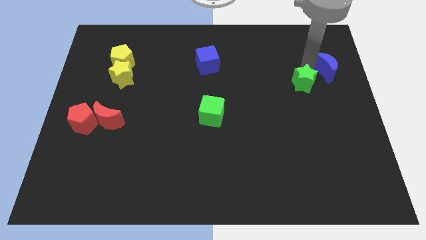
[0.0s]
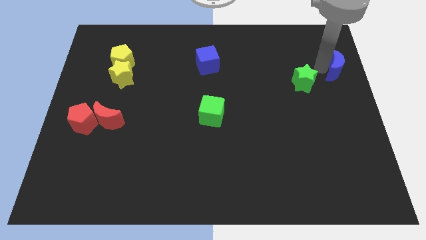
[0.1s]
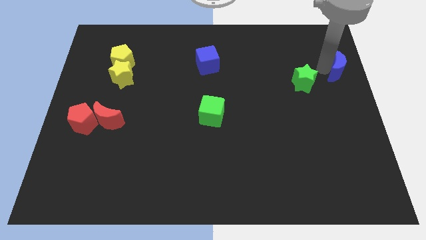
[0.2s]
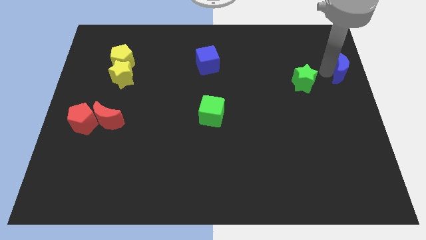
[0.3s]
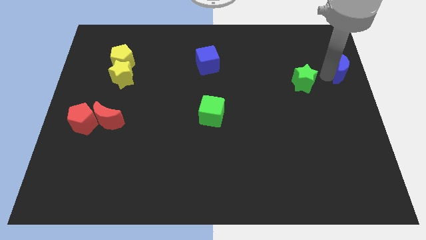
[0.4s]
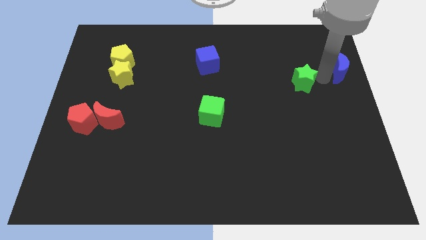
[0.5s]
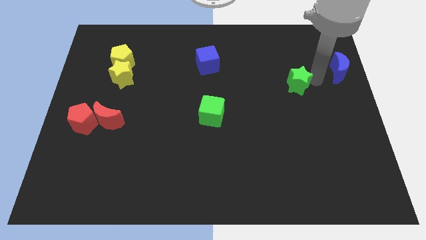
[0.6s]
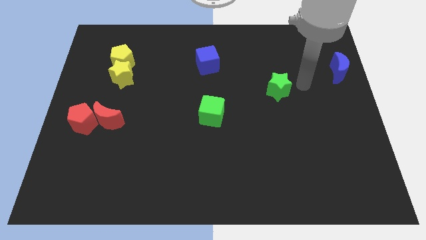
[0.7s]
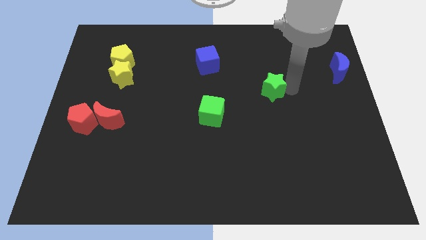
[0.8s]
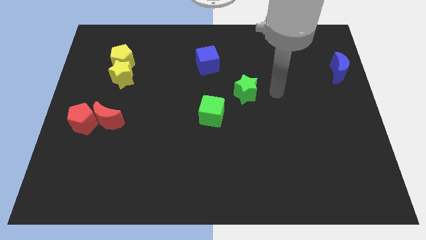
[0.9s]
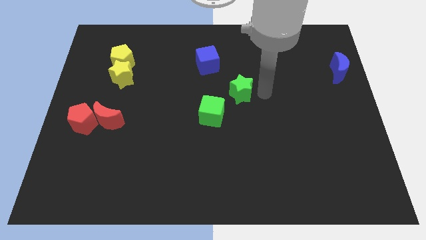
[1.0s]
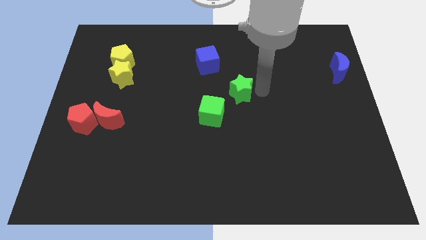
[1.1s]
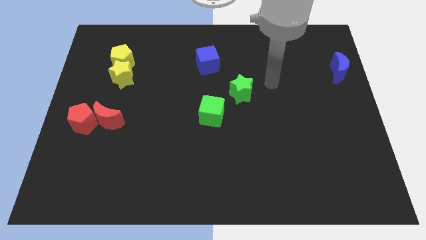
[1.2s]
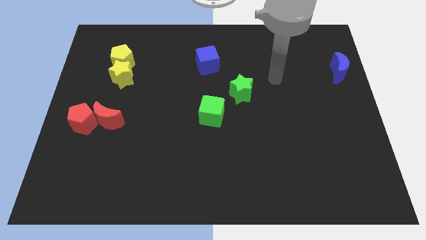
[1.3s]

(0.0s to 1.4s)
move the green star and the blue moon away from each other

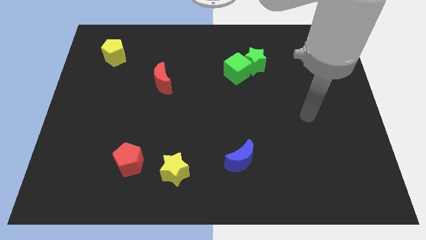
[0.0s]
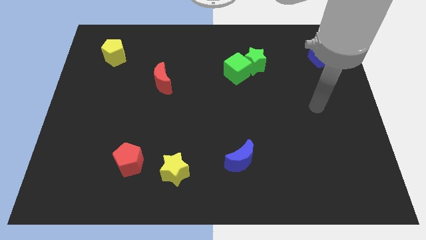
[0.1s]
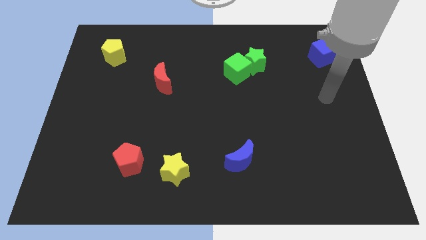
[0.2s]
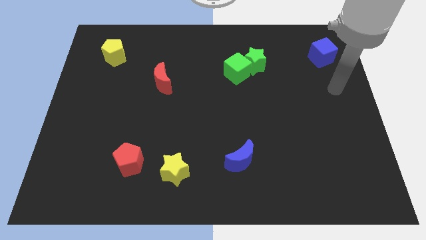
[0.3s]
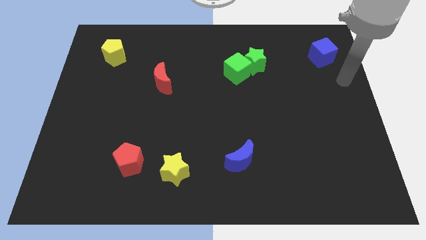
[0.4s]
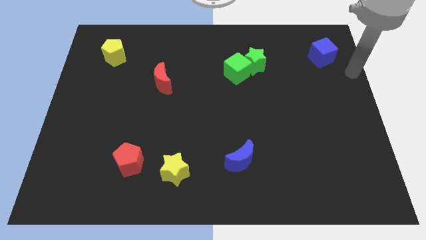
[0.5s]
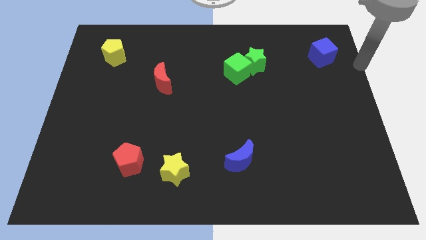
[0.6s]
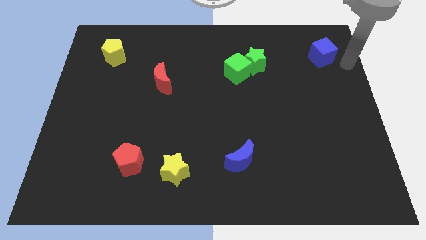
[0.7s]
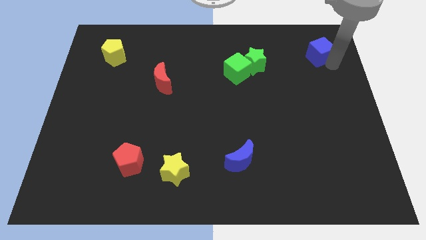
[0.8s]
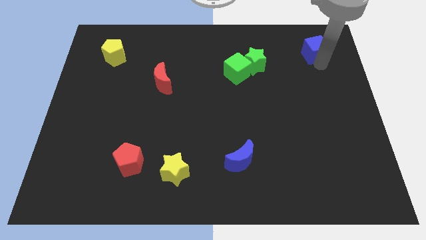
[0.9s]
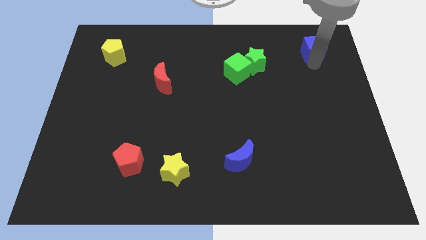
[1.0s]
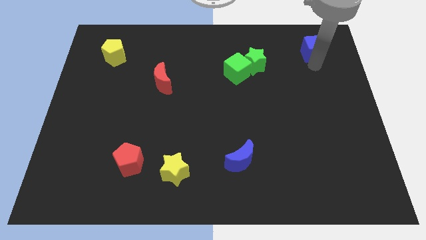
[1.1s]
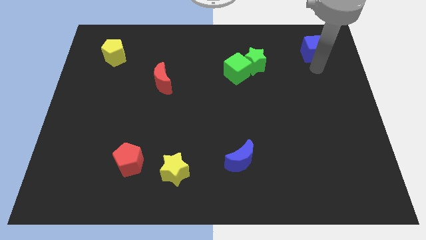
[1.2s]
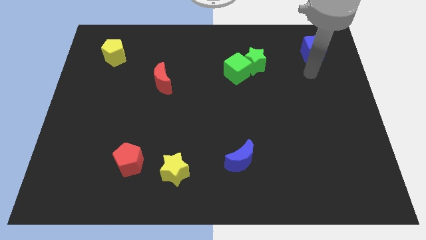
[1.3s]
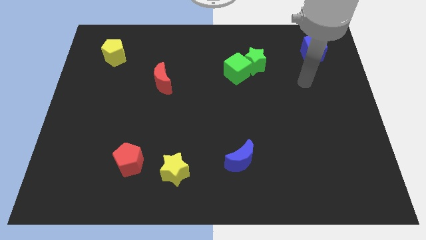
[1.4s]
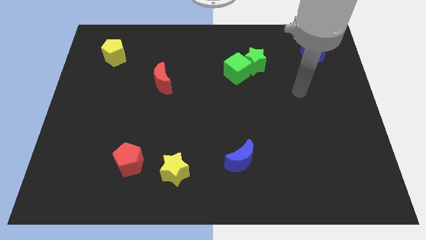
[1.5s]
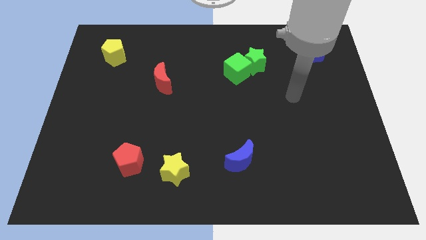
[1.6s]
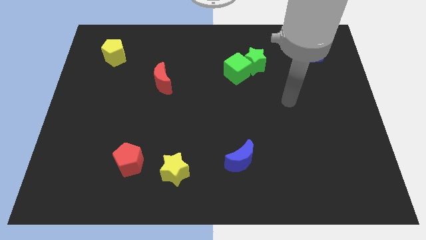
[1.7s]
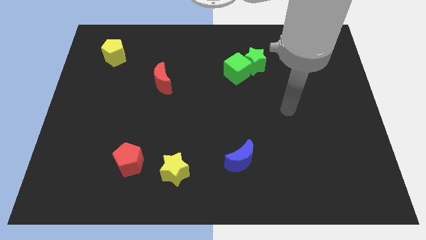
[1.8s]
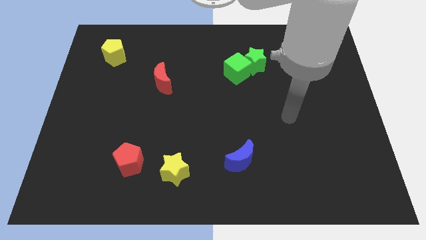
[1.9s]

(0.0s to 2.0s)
move your arm towards the blue cube

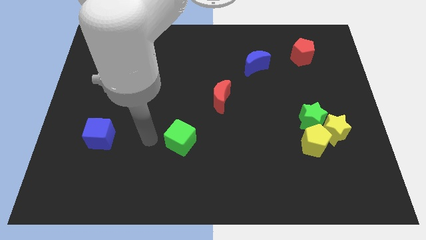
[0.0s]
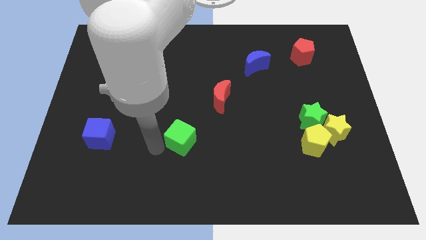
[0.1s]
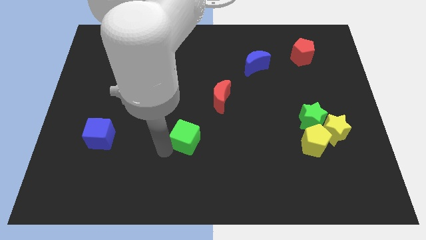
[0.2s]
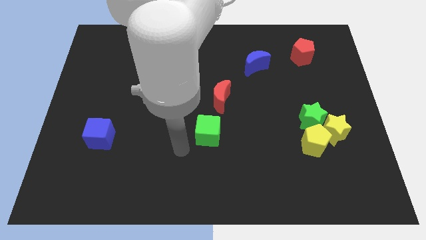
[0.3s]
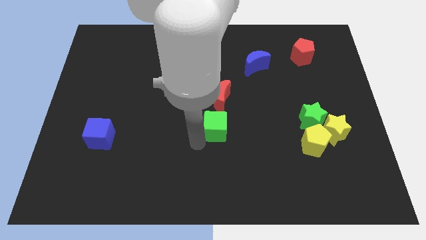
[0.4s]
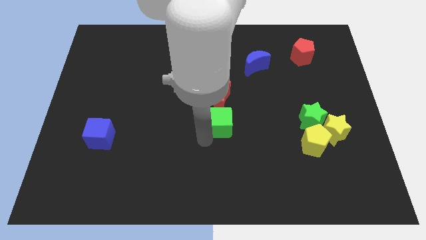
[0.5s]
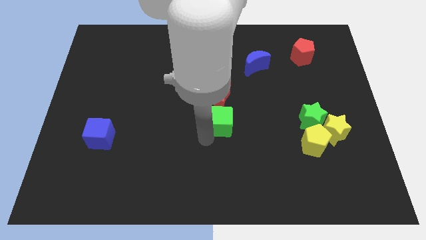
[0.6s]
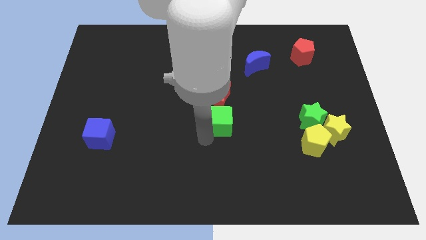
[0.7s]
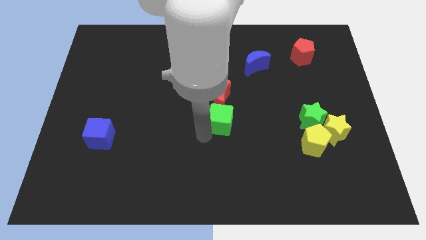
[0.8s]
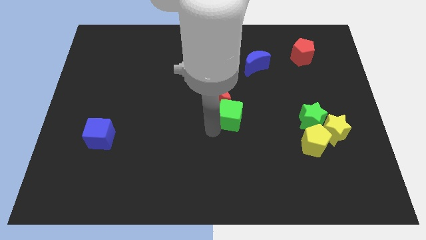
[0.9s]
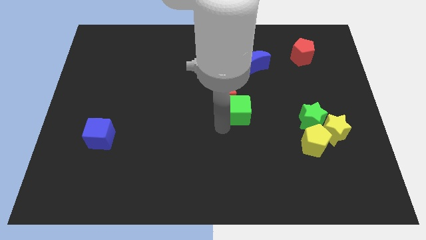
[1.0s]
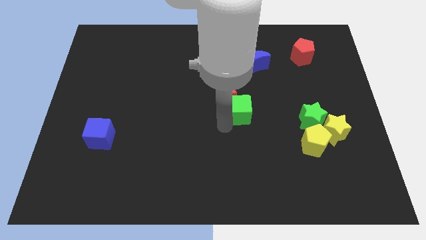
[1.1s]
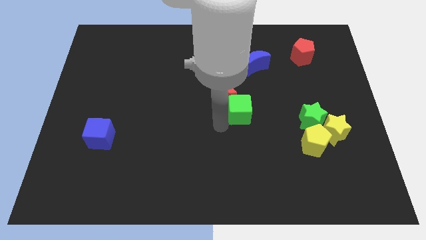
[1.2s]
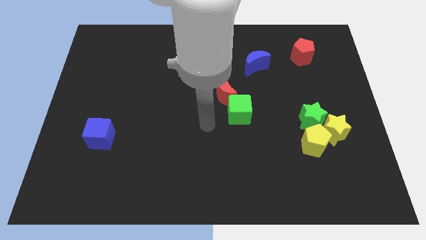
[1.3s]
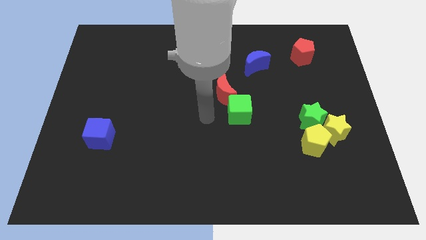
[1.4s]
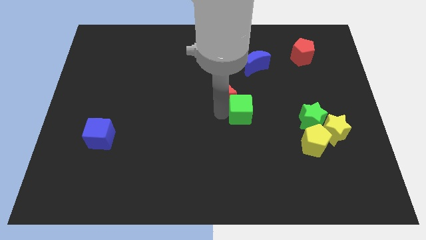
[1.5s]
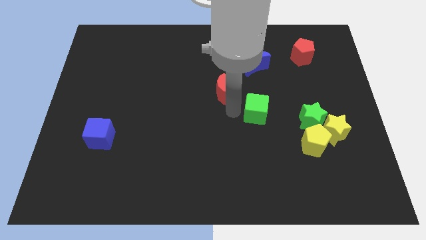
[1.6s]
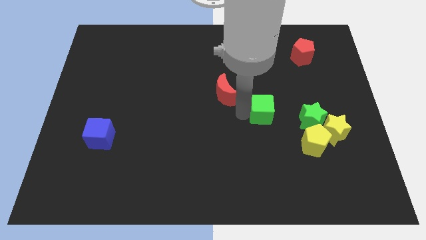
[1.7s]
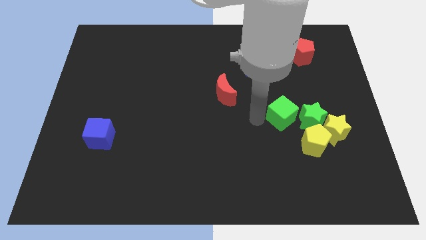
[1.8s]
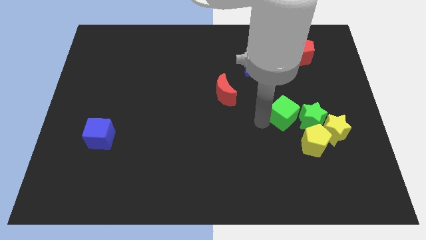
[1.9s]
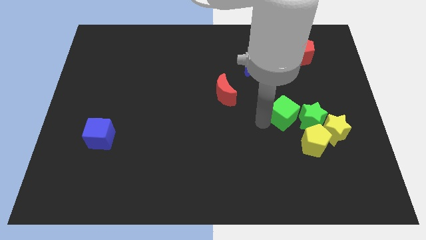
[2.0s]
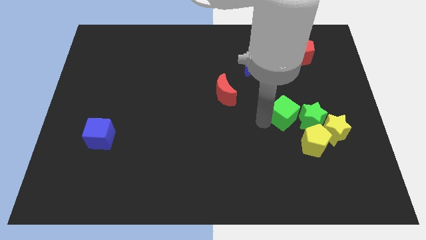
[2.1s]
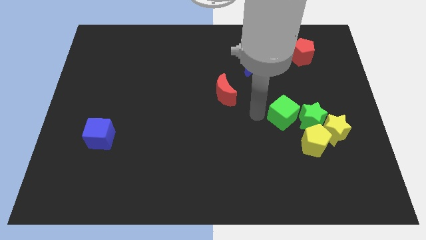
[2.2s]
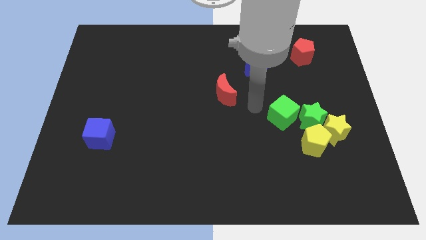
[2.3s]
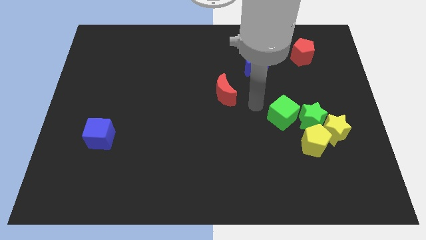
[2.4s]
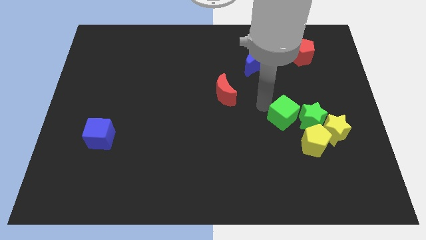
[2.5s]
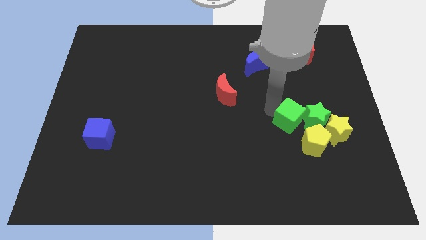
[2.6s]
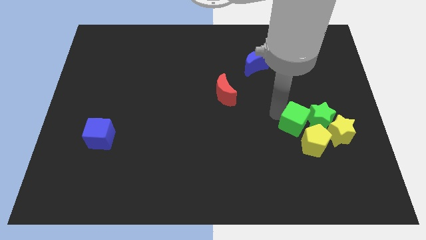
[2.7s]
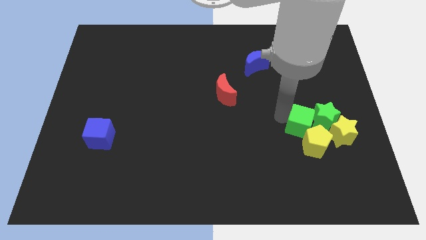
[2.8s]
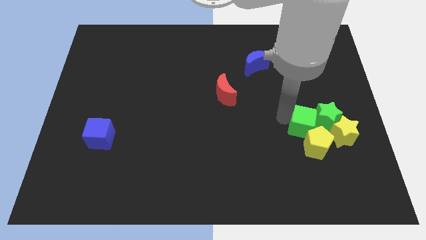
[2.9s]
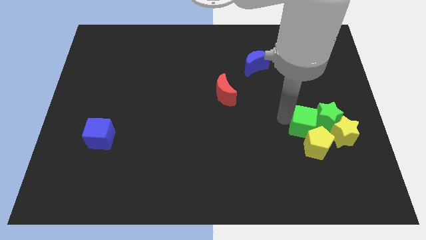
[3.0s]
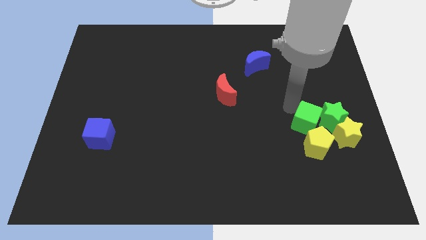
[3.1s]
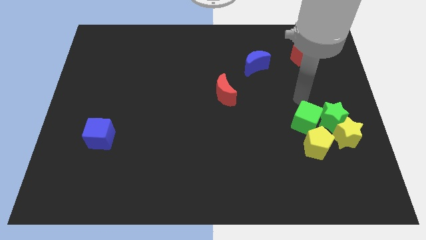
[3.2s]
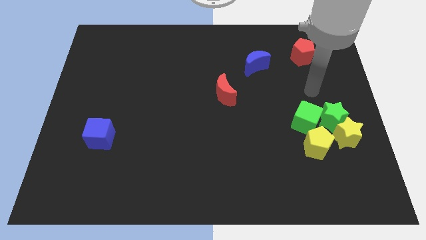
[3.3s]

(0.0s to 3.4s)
move the green cube into the green star

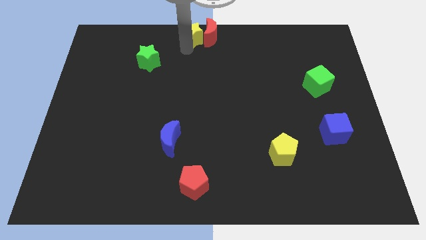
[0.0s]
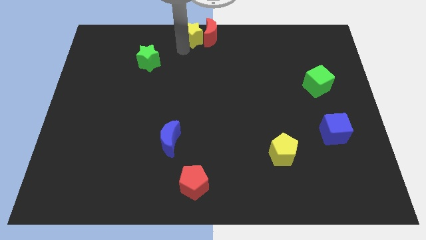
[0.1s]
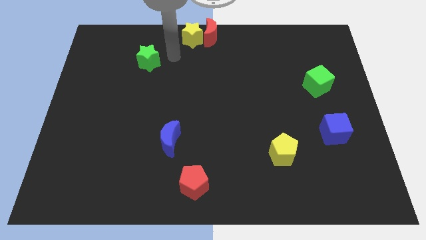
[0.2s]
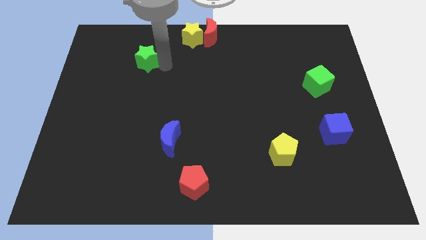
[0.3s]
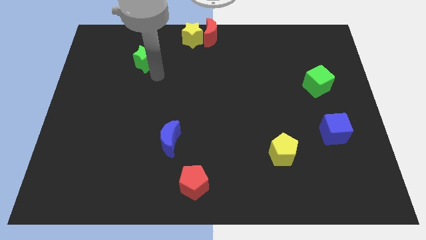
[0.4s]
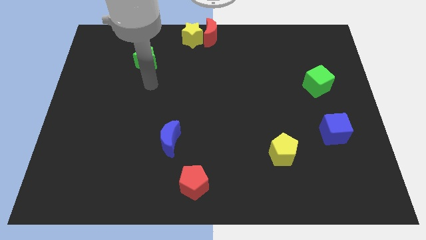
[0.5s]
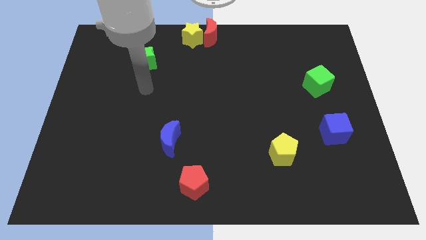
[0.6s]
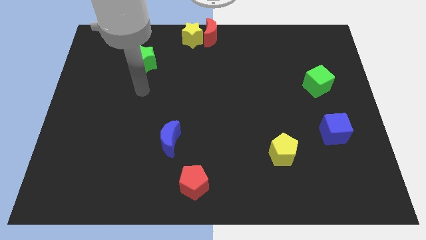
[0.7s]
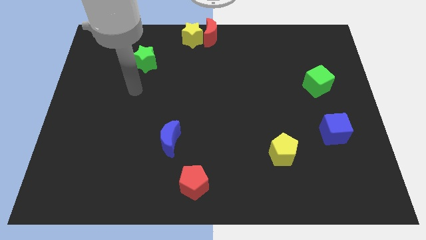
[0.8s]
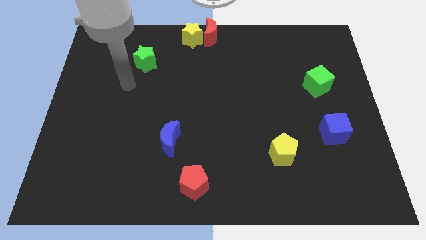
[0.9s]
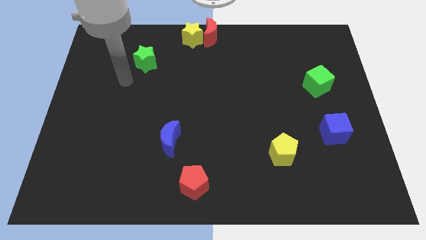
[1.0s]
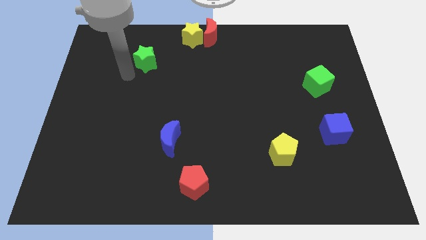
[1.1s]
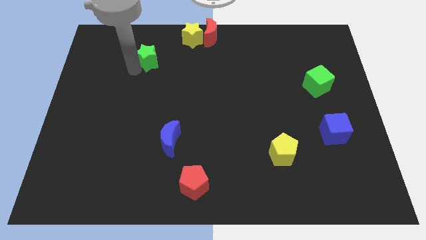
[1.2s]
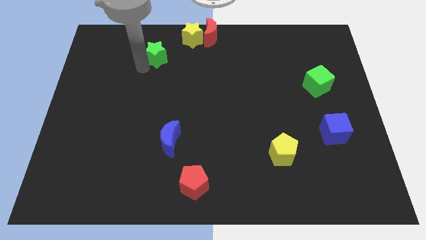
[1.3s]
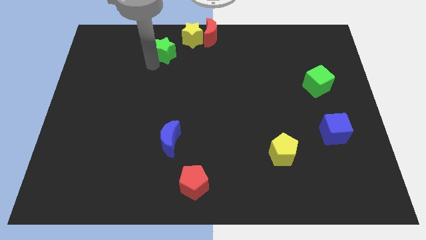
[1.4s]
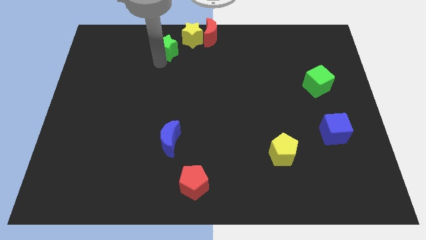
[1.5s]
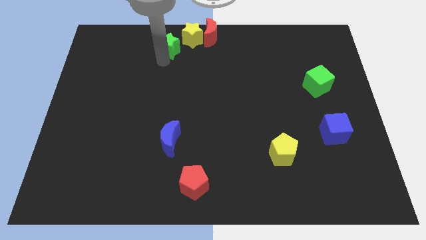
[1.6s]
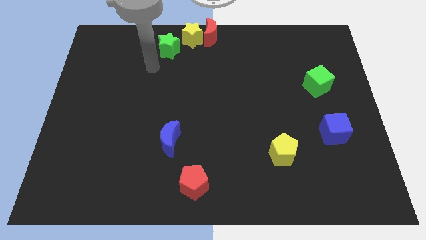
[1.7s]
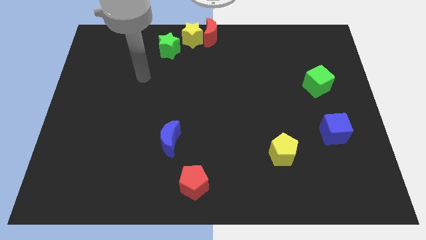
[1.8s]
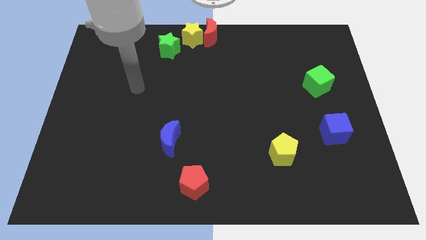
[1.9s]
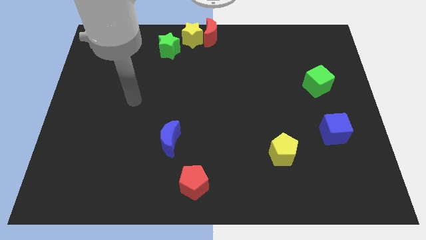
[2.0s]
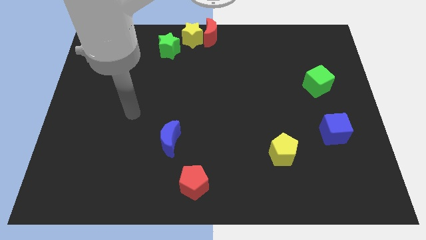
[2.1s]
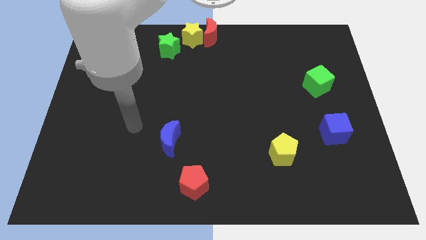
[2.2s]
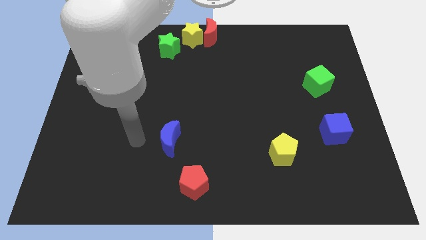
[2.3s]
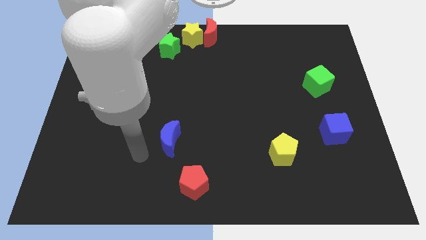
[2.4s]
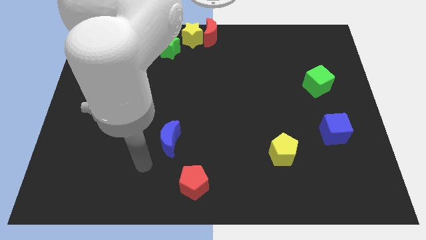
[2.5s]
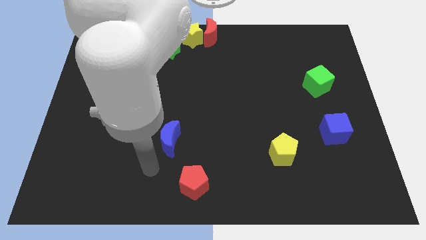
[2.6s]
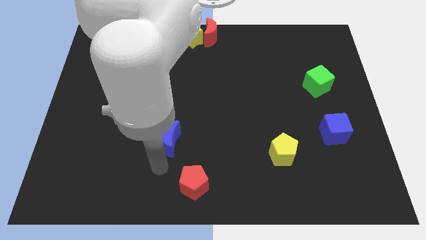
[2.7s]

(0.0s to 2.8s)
move the green star diagonally left to the yellow star
